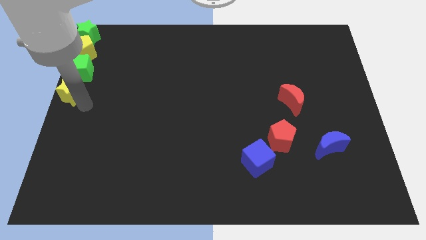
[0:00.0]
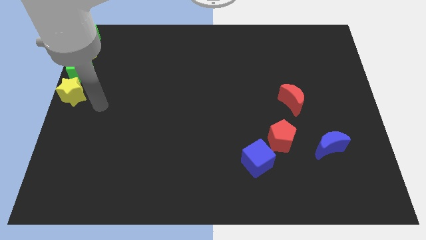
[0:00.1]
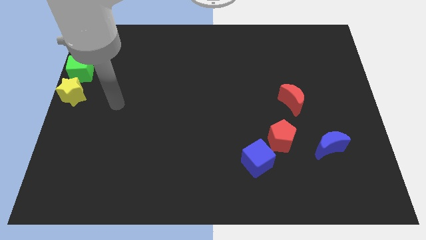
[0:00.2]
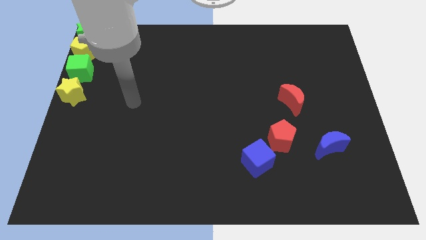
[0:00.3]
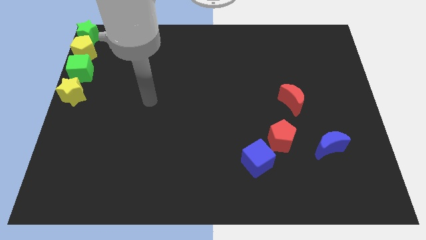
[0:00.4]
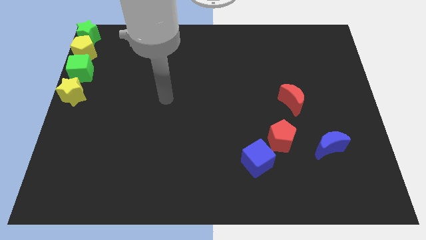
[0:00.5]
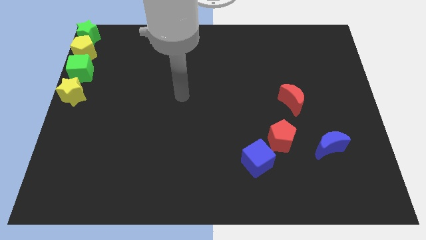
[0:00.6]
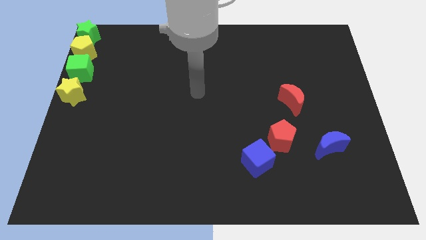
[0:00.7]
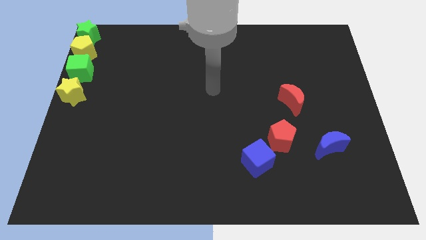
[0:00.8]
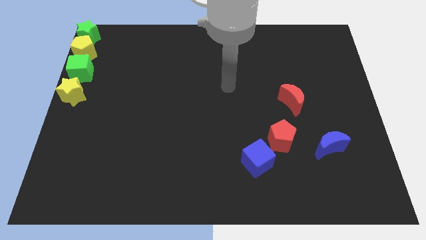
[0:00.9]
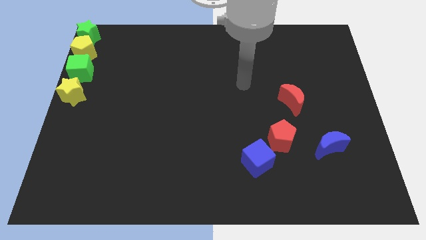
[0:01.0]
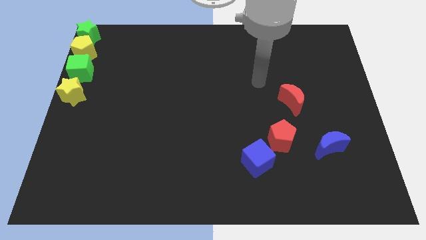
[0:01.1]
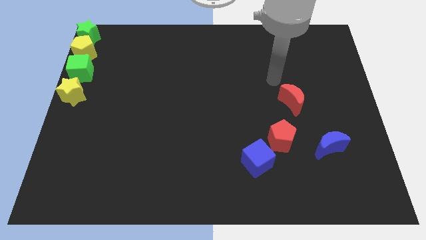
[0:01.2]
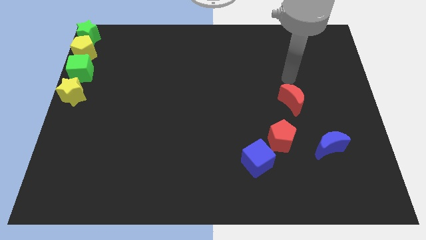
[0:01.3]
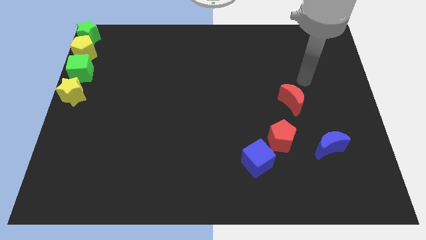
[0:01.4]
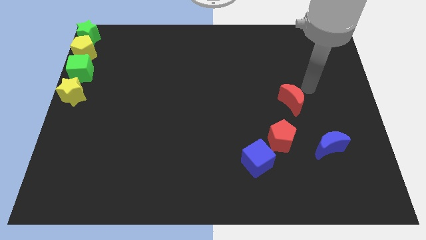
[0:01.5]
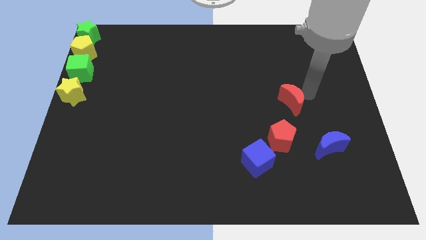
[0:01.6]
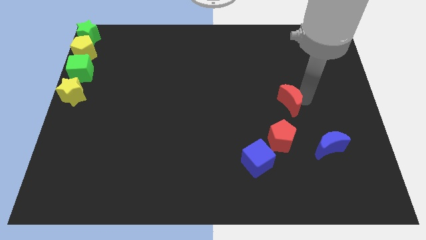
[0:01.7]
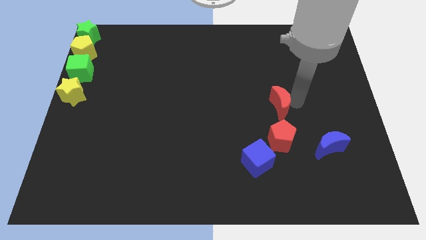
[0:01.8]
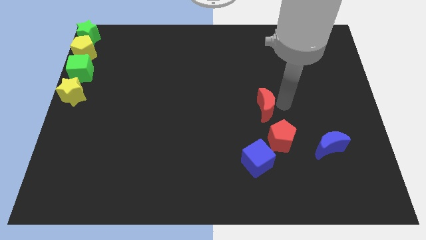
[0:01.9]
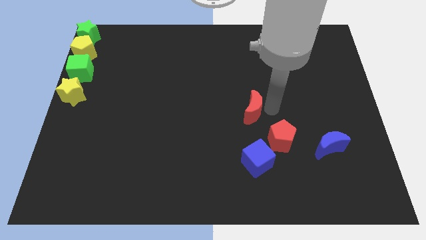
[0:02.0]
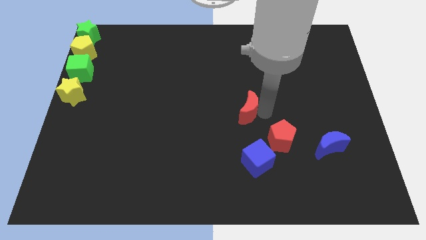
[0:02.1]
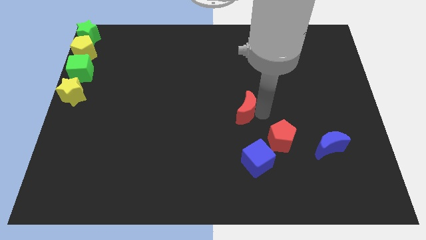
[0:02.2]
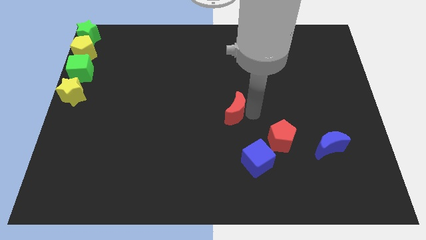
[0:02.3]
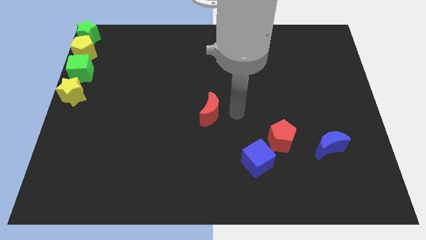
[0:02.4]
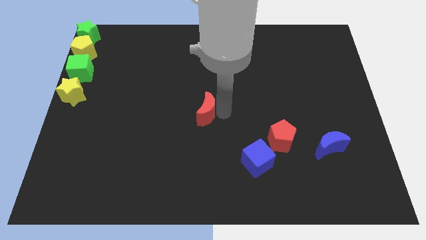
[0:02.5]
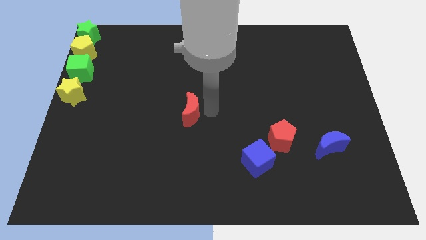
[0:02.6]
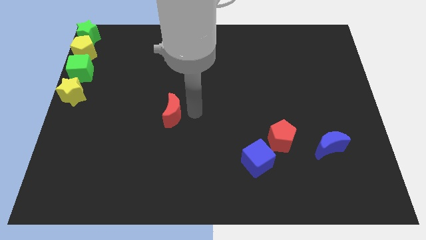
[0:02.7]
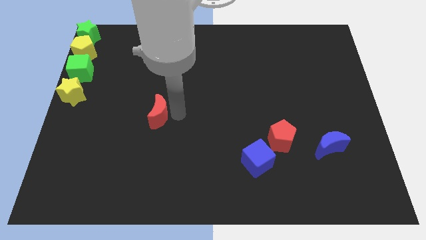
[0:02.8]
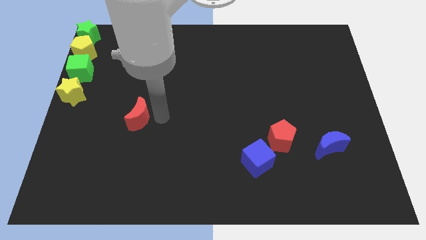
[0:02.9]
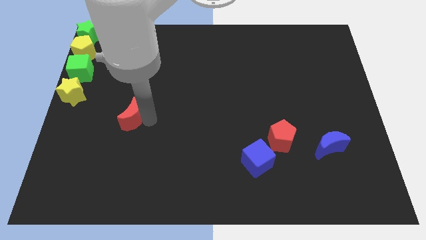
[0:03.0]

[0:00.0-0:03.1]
move red crescent diagonally towards yellow star

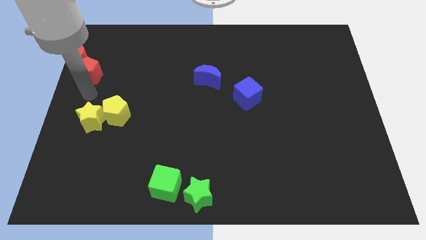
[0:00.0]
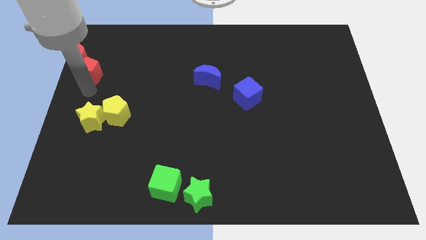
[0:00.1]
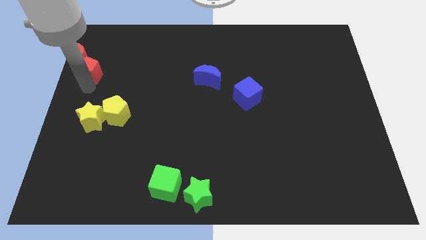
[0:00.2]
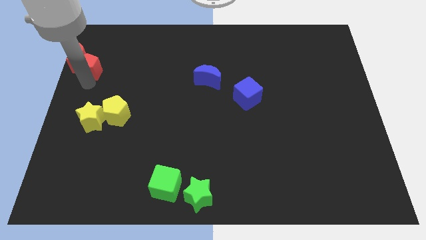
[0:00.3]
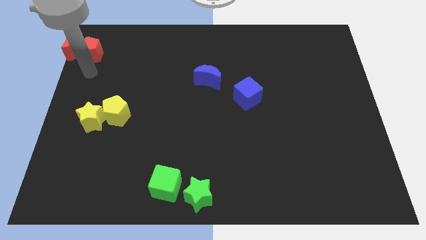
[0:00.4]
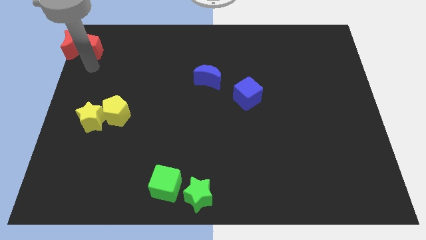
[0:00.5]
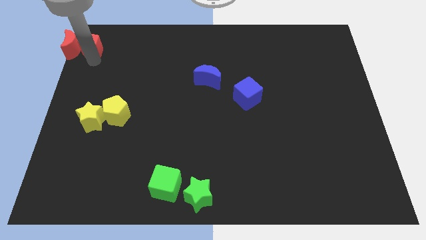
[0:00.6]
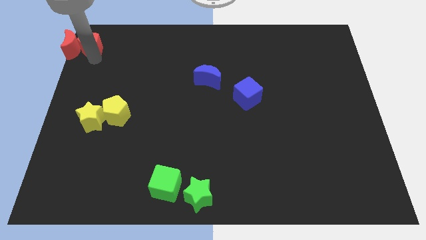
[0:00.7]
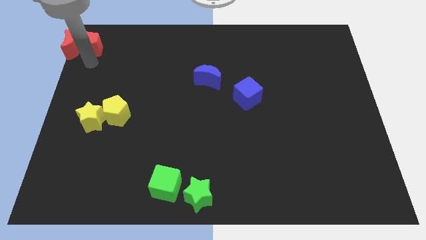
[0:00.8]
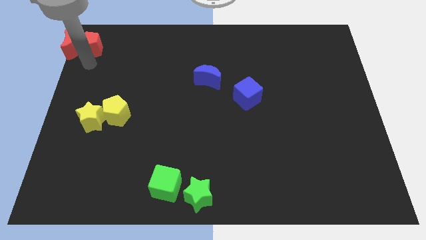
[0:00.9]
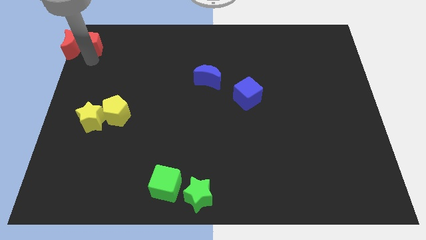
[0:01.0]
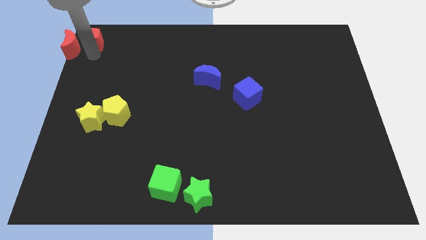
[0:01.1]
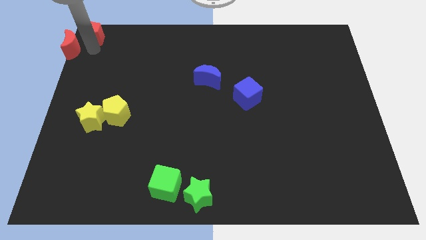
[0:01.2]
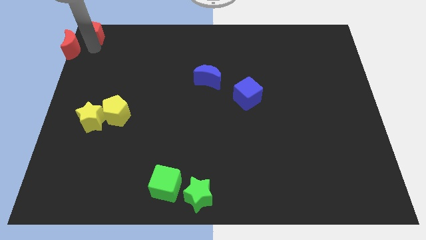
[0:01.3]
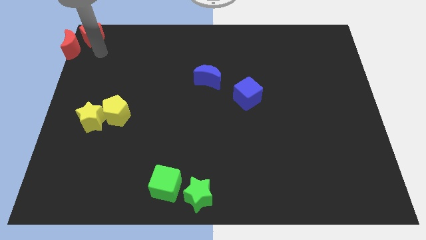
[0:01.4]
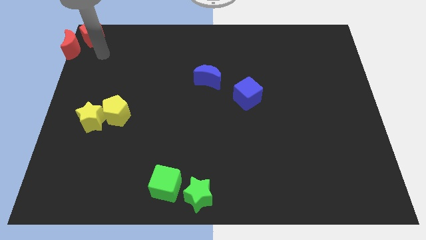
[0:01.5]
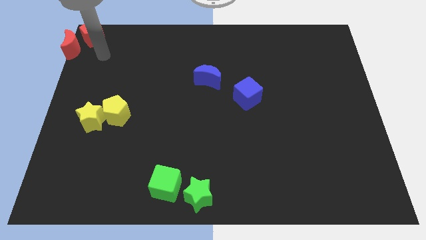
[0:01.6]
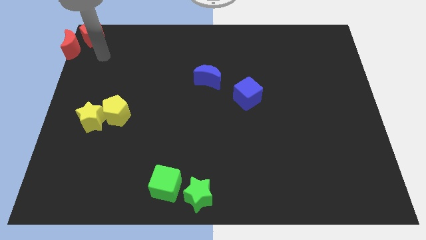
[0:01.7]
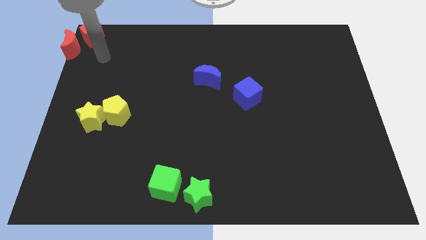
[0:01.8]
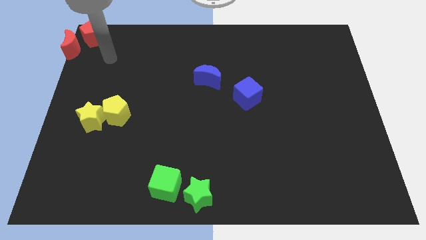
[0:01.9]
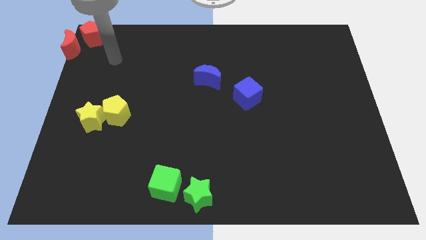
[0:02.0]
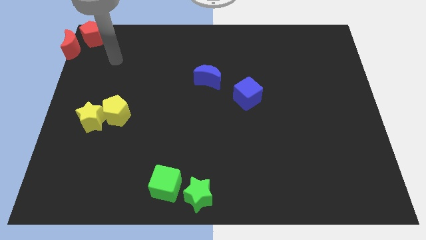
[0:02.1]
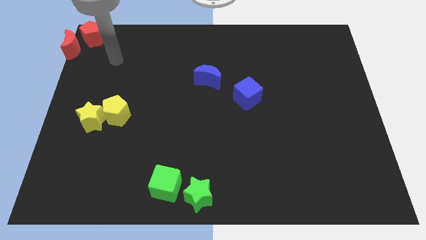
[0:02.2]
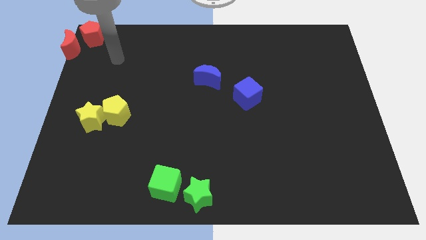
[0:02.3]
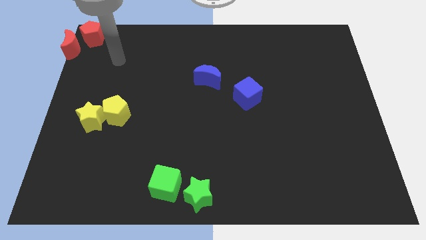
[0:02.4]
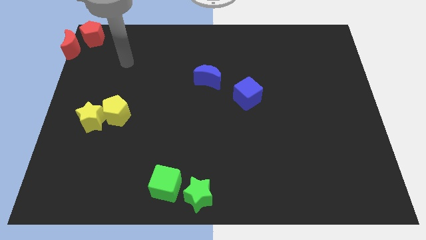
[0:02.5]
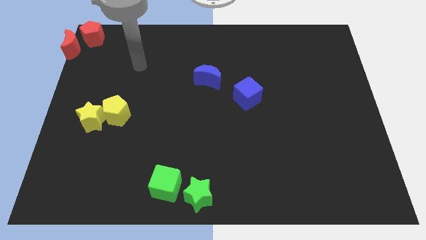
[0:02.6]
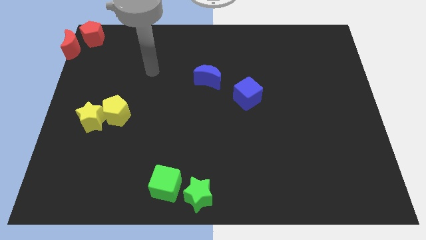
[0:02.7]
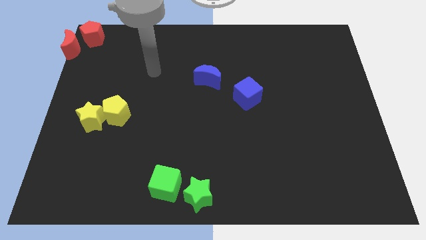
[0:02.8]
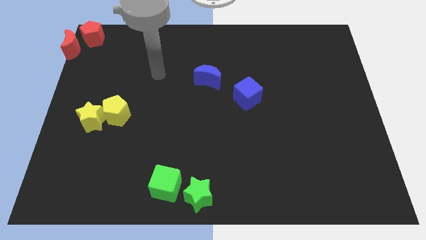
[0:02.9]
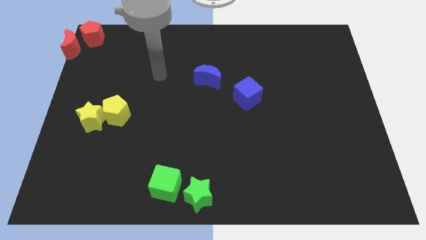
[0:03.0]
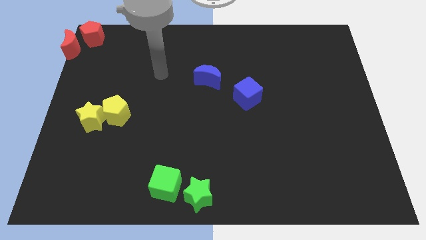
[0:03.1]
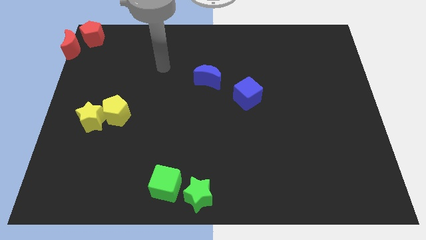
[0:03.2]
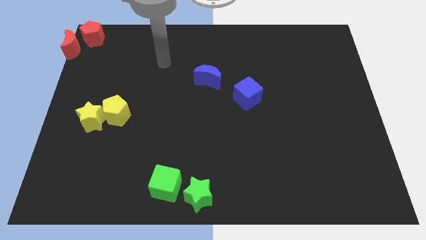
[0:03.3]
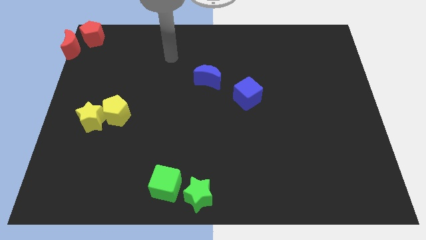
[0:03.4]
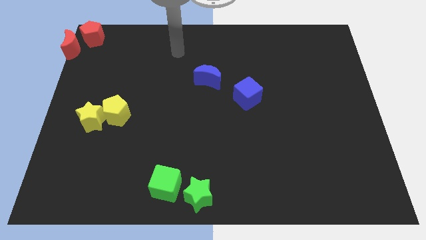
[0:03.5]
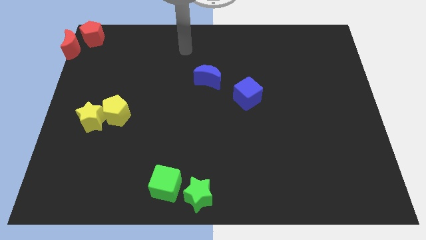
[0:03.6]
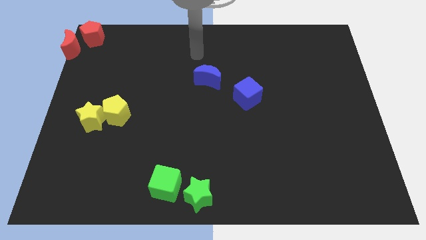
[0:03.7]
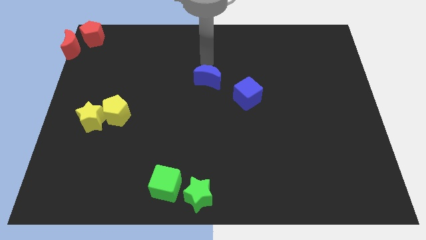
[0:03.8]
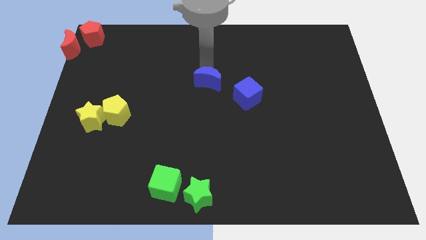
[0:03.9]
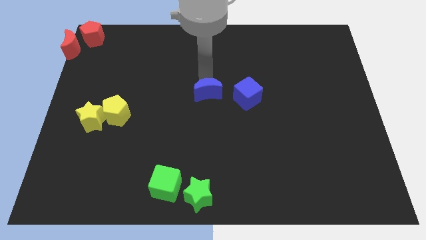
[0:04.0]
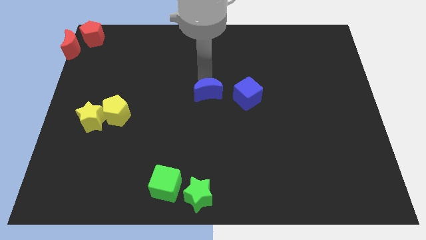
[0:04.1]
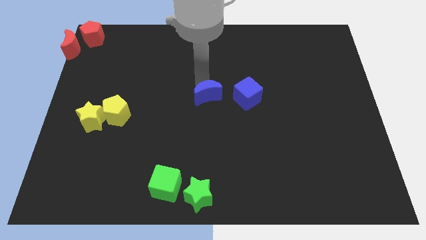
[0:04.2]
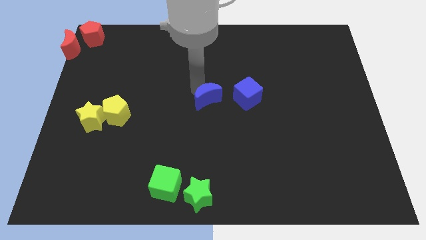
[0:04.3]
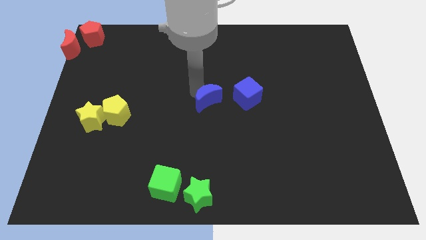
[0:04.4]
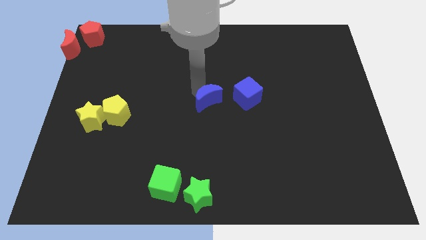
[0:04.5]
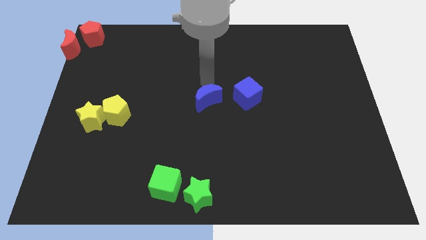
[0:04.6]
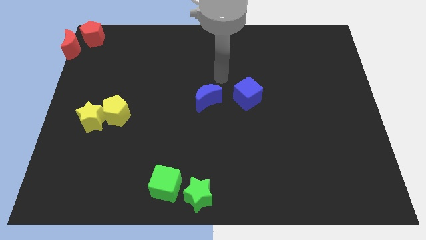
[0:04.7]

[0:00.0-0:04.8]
place the red pentagon to the top corner of the board

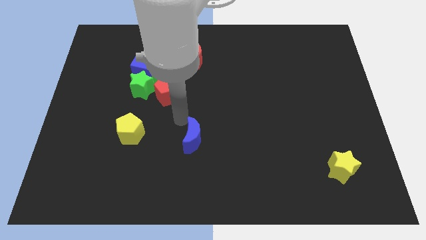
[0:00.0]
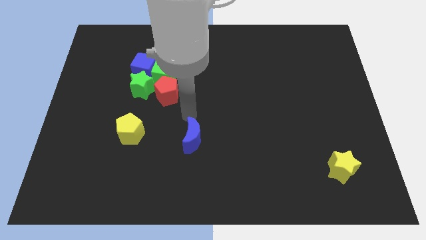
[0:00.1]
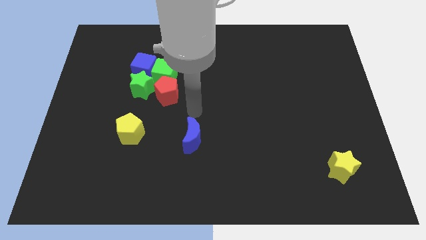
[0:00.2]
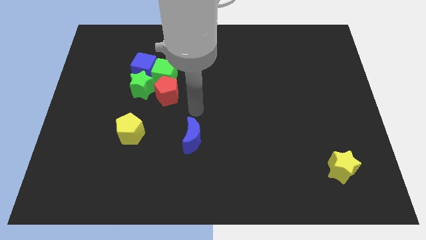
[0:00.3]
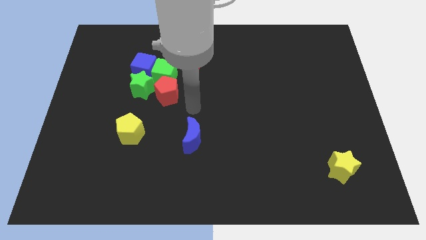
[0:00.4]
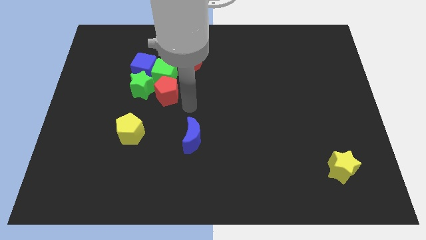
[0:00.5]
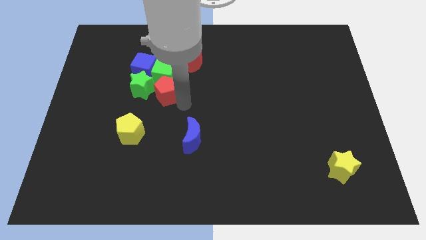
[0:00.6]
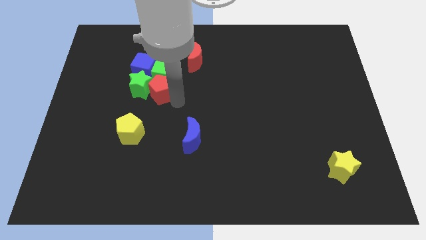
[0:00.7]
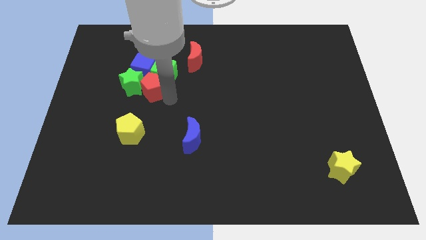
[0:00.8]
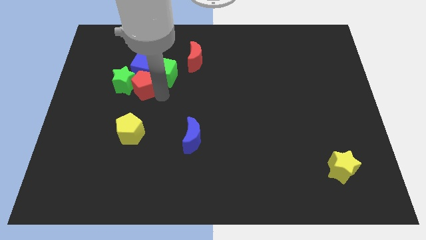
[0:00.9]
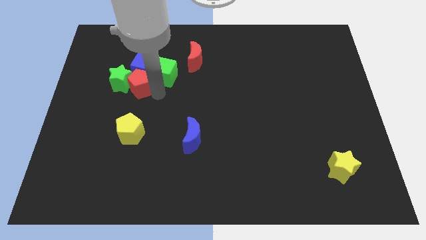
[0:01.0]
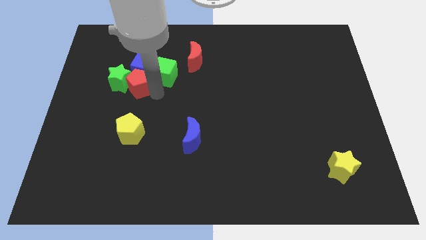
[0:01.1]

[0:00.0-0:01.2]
push red pentagon into green star
